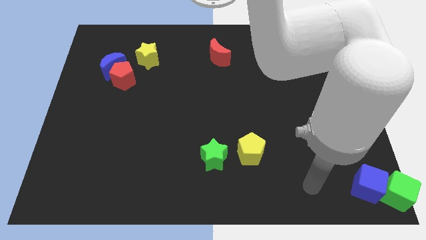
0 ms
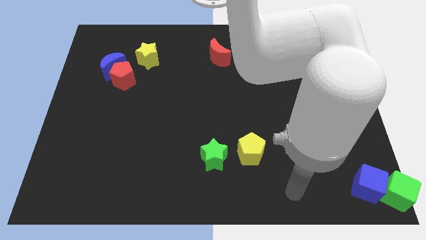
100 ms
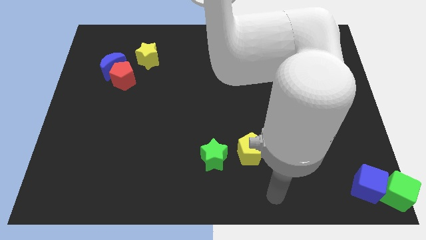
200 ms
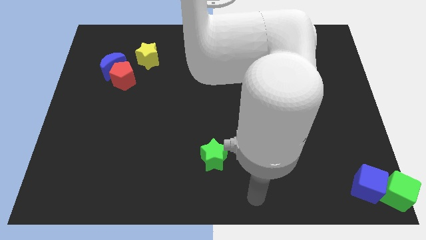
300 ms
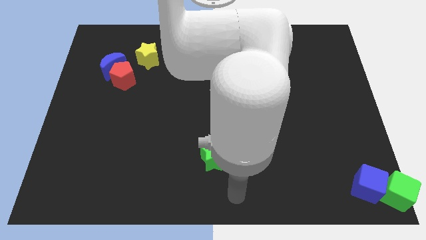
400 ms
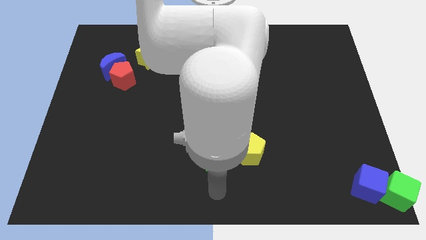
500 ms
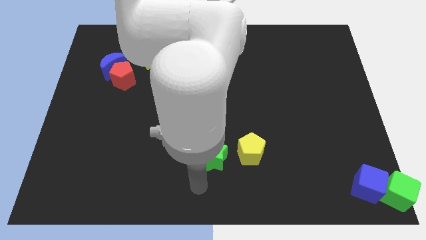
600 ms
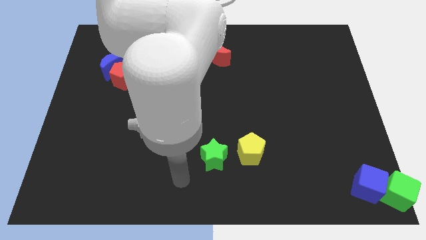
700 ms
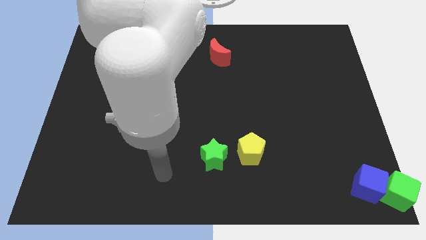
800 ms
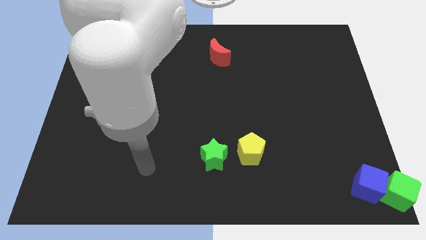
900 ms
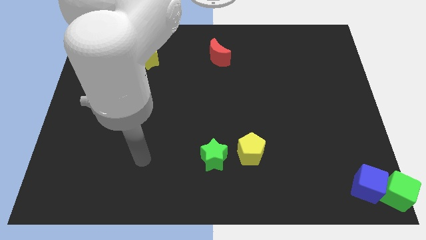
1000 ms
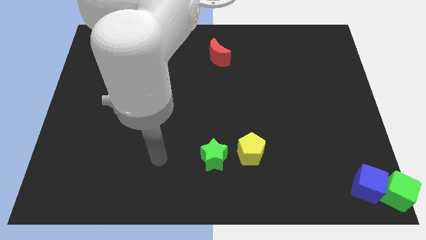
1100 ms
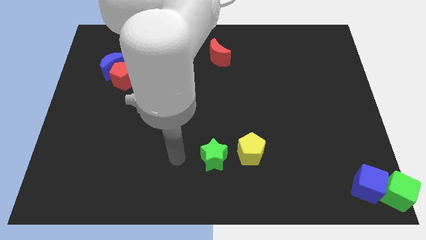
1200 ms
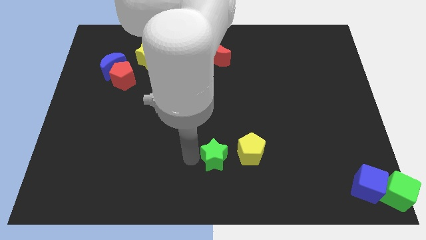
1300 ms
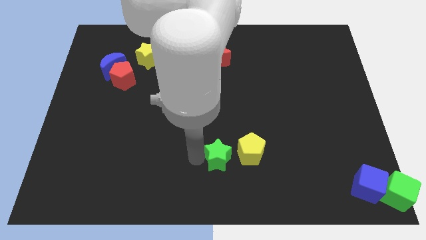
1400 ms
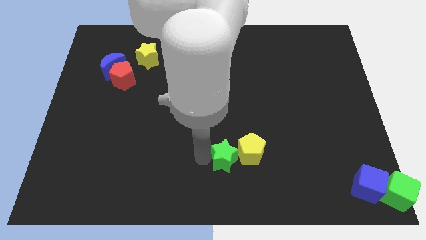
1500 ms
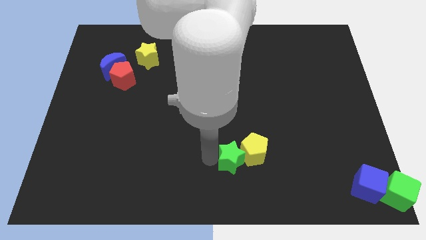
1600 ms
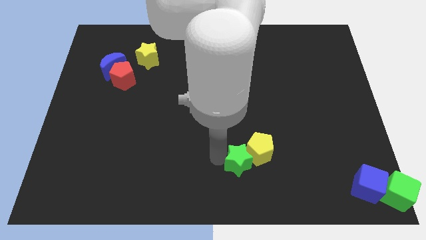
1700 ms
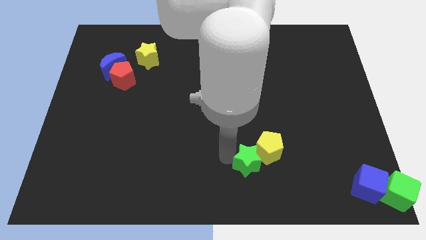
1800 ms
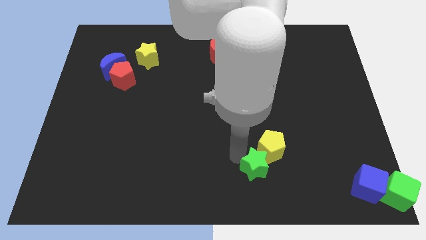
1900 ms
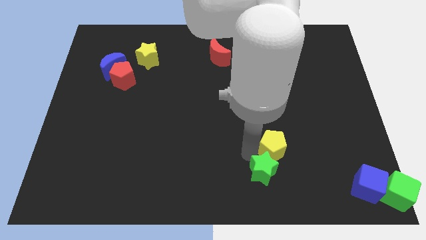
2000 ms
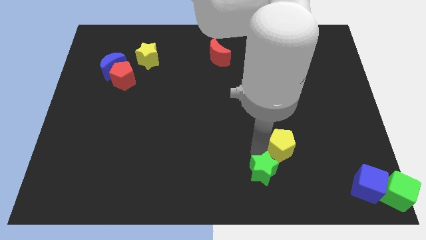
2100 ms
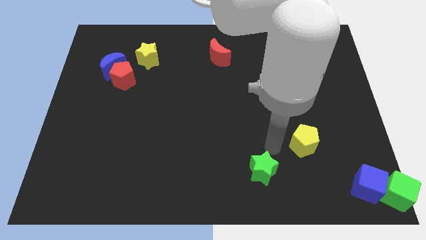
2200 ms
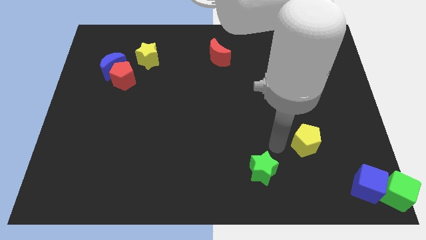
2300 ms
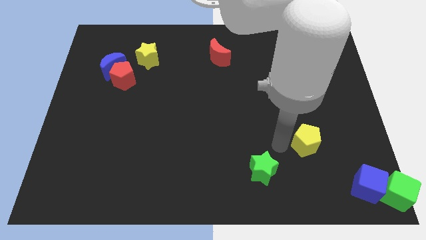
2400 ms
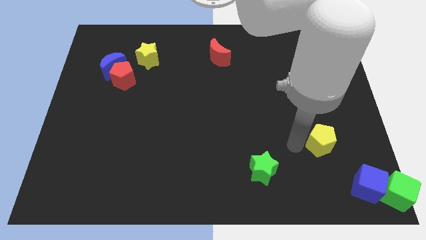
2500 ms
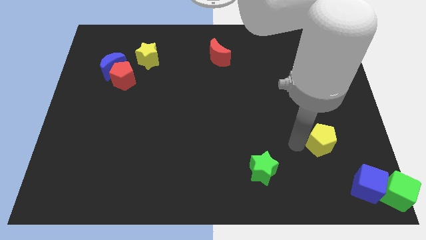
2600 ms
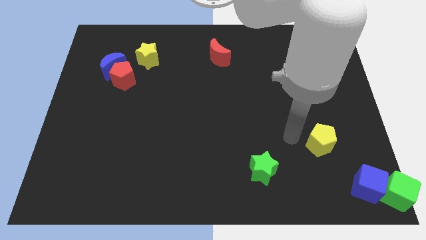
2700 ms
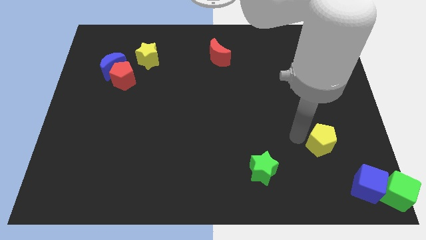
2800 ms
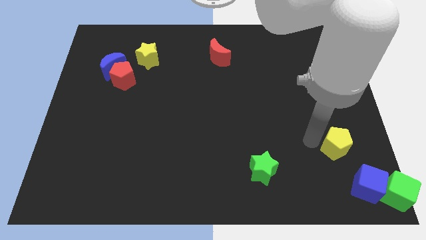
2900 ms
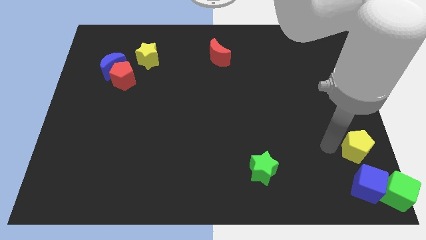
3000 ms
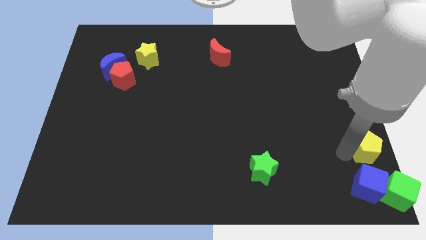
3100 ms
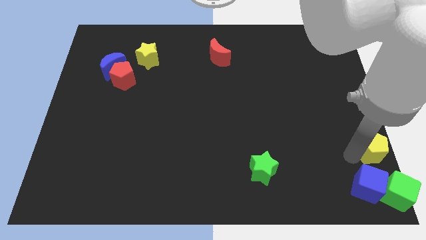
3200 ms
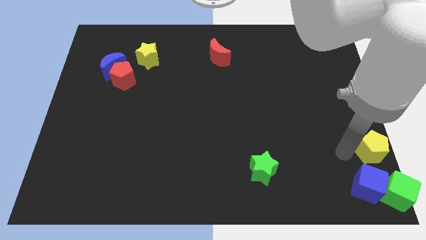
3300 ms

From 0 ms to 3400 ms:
place yellow pentagon above blue cube

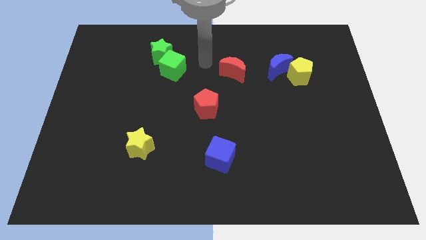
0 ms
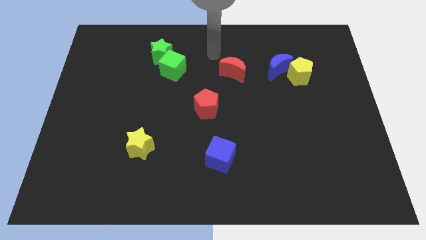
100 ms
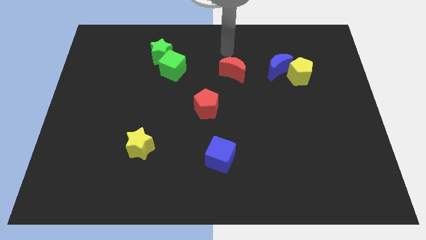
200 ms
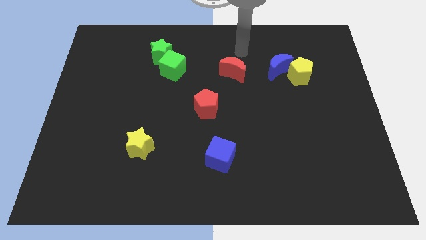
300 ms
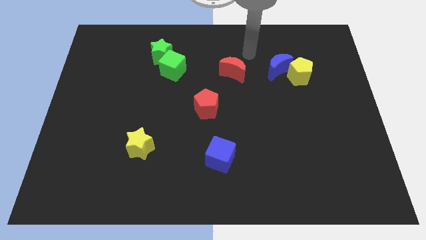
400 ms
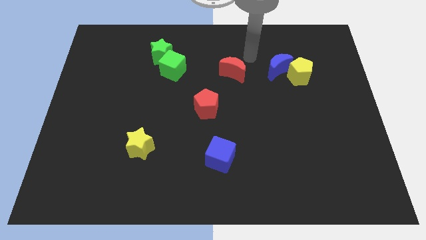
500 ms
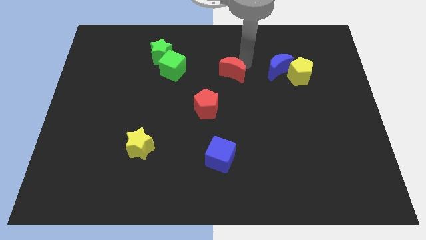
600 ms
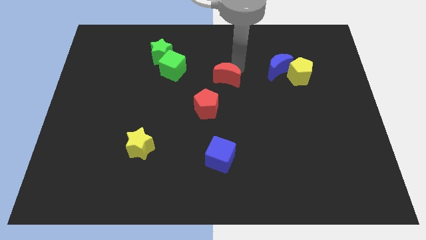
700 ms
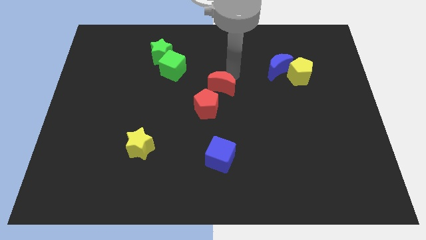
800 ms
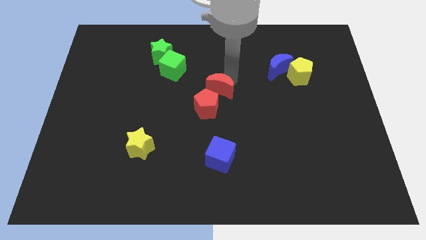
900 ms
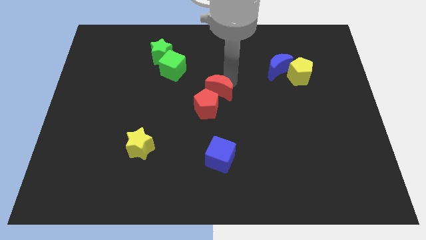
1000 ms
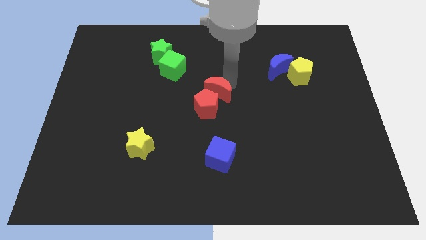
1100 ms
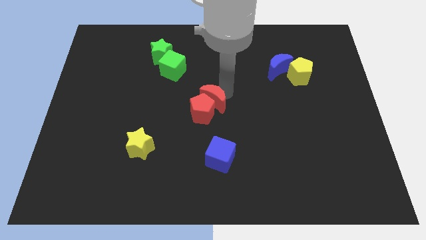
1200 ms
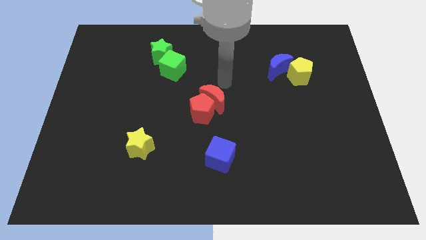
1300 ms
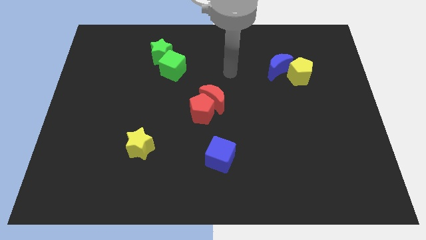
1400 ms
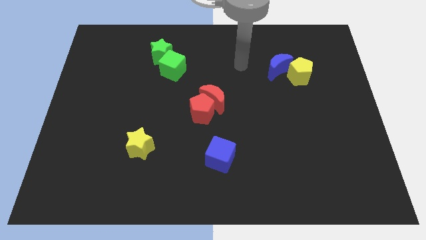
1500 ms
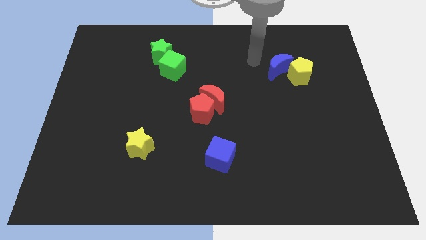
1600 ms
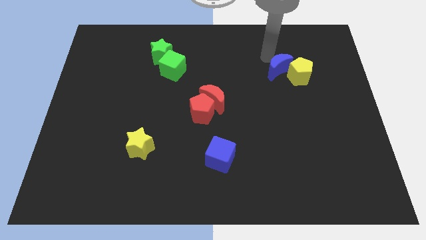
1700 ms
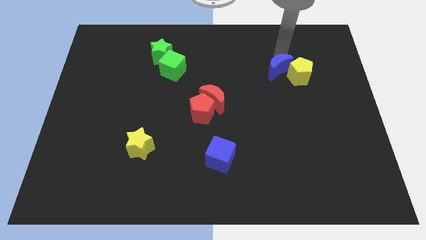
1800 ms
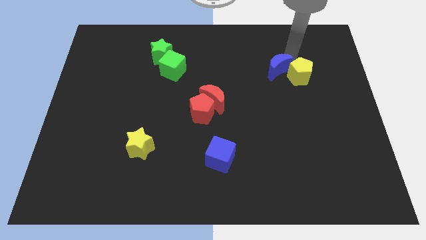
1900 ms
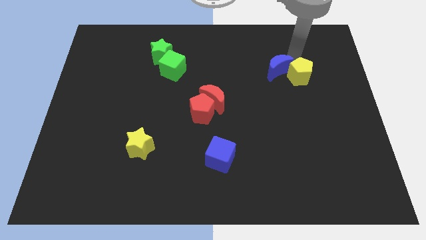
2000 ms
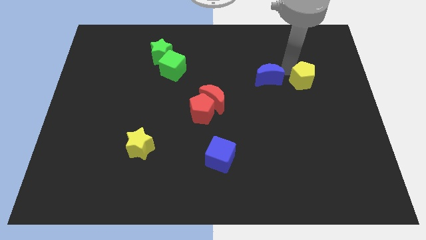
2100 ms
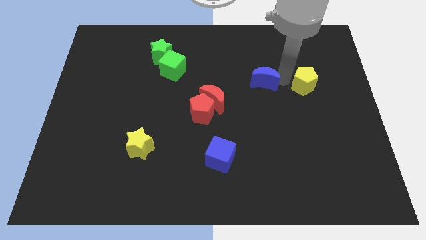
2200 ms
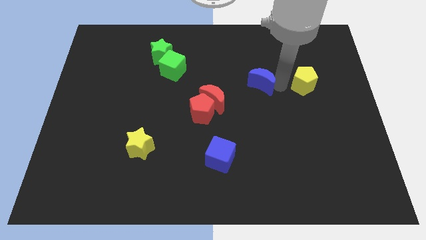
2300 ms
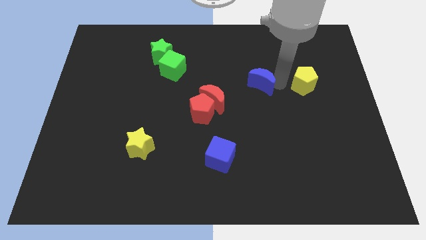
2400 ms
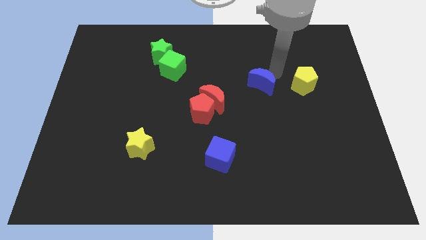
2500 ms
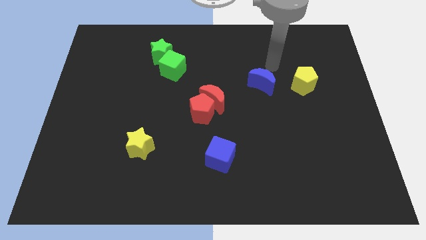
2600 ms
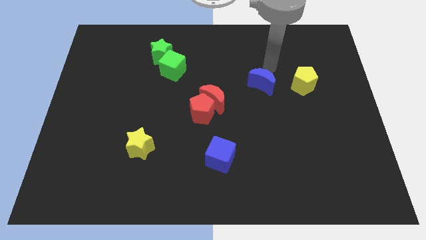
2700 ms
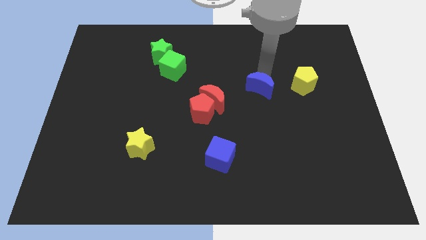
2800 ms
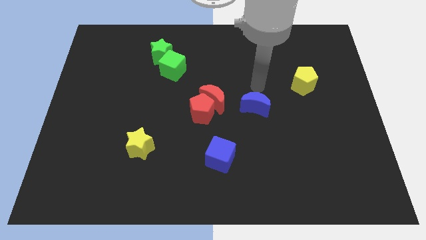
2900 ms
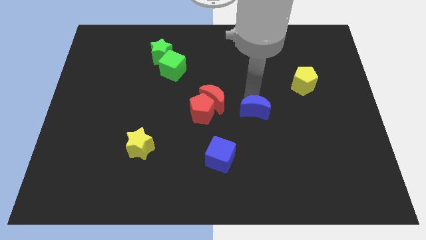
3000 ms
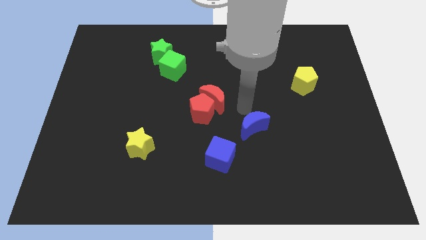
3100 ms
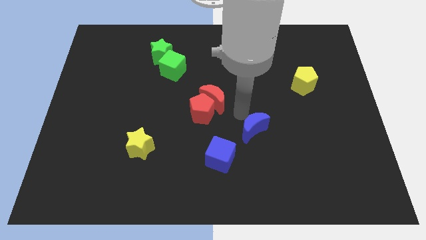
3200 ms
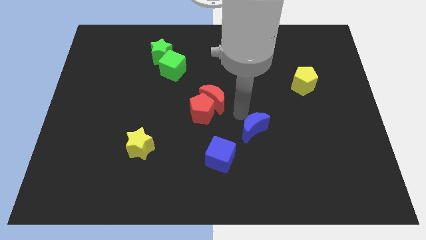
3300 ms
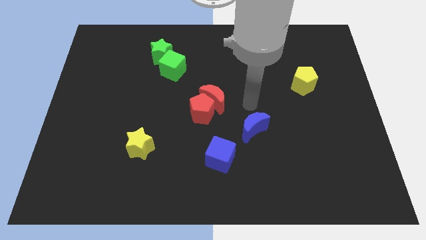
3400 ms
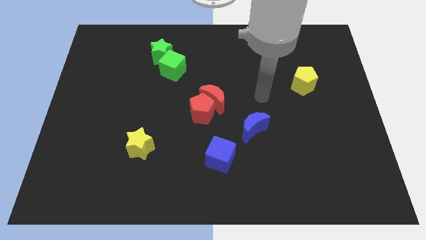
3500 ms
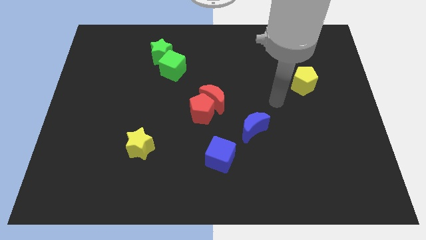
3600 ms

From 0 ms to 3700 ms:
place the red crescent and blue moon towards the bottom side of the board

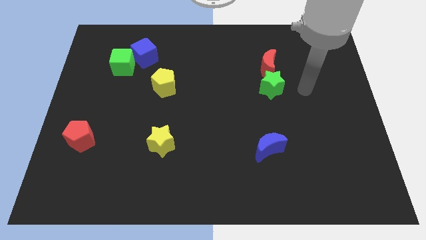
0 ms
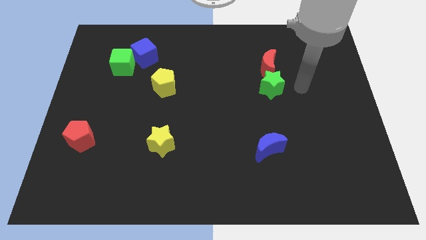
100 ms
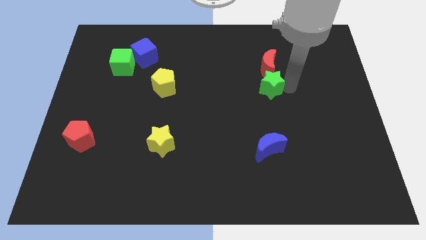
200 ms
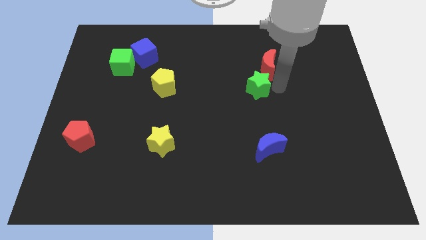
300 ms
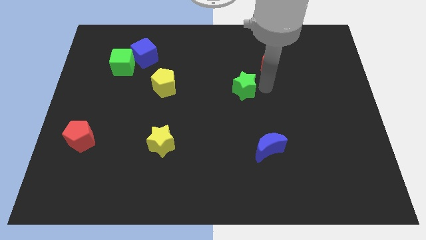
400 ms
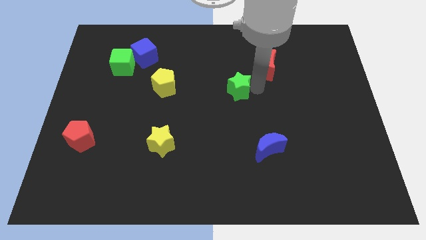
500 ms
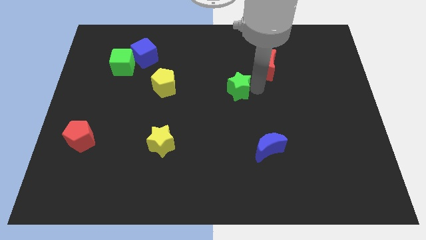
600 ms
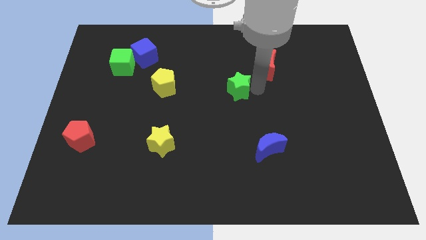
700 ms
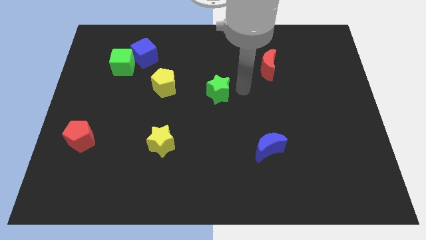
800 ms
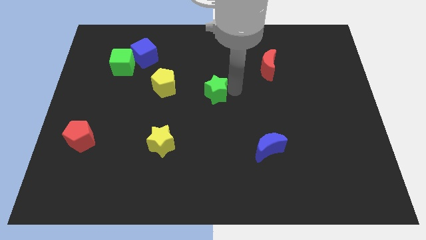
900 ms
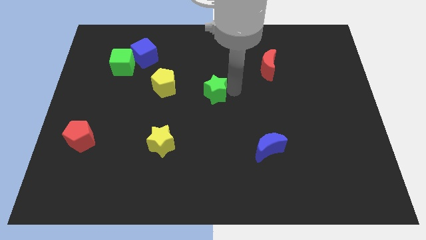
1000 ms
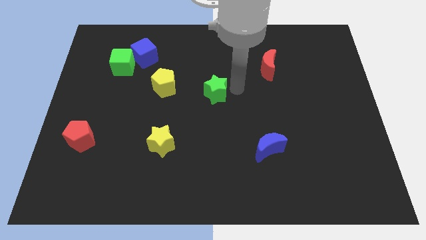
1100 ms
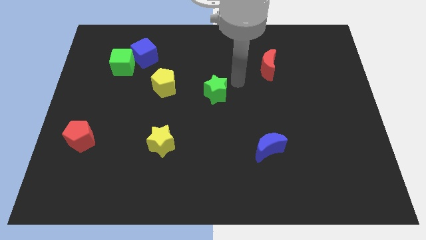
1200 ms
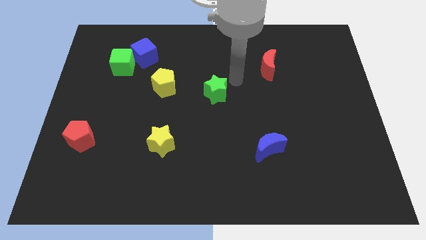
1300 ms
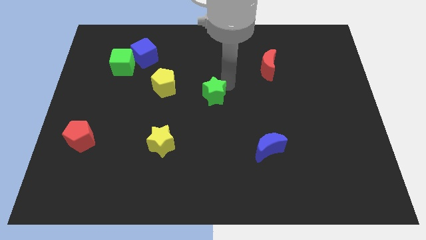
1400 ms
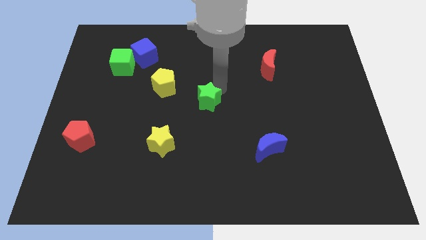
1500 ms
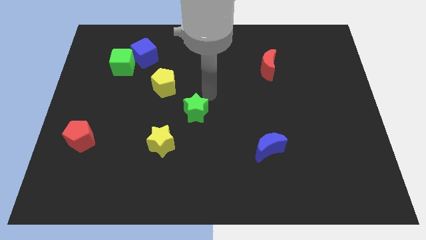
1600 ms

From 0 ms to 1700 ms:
separate the green star from the red moon

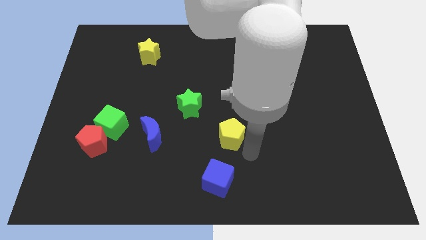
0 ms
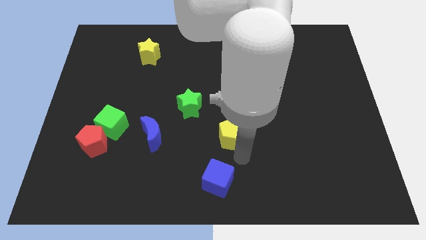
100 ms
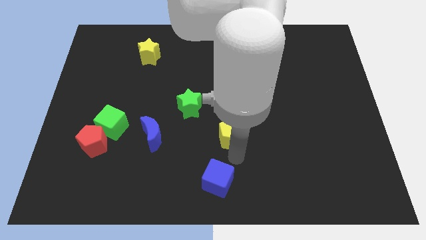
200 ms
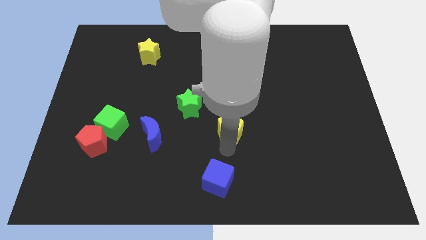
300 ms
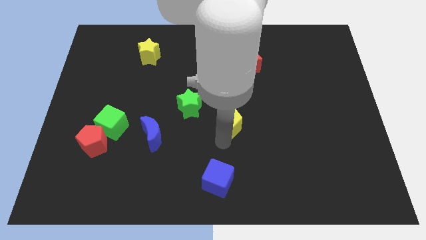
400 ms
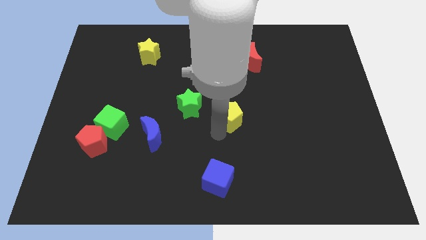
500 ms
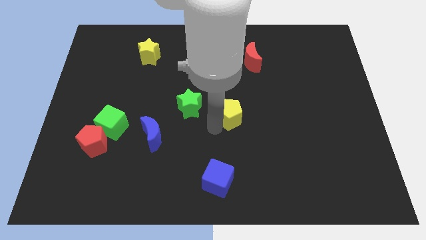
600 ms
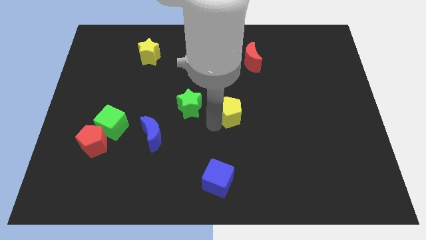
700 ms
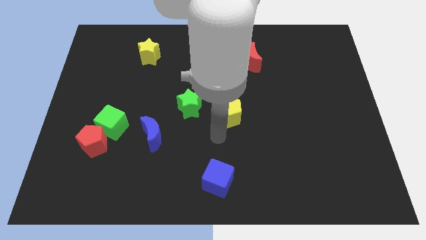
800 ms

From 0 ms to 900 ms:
move the yellow pentagon towards the center of the board
